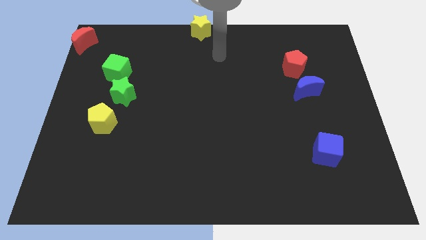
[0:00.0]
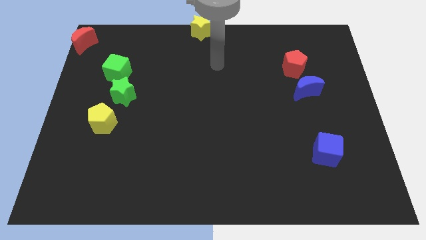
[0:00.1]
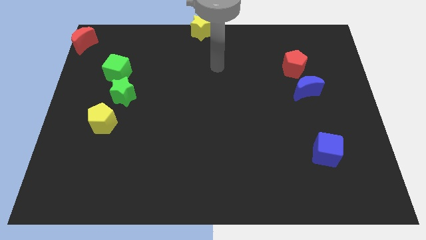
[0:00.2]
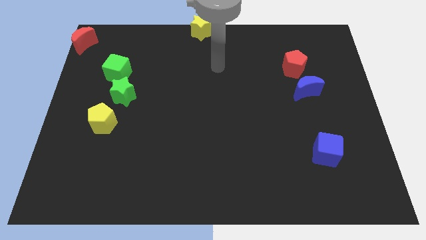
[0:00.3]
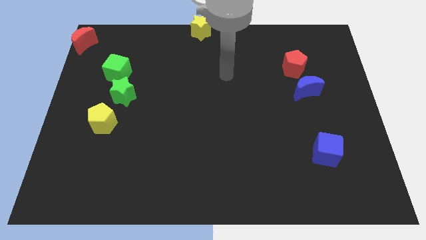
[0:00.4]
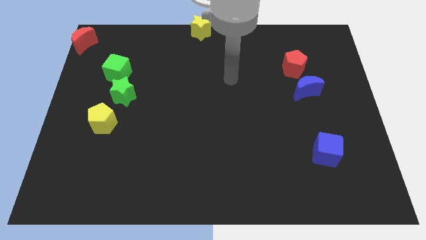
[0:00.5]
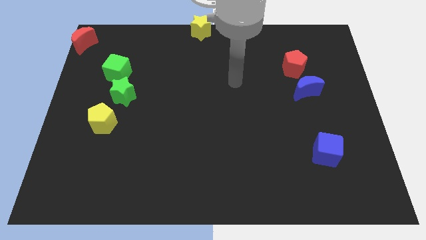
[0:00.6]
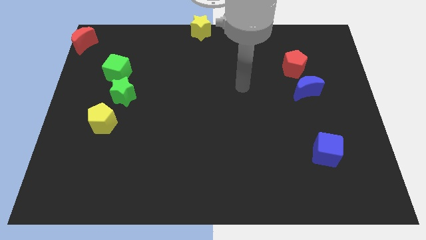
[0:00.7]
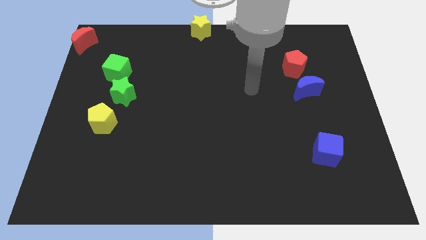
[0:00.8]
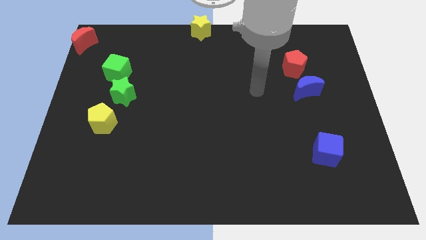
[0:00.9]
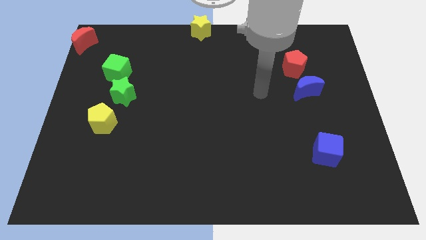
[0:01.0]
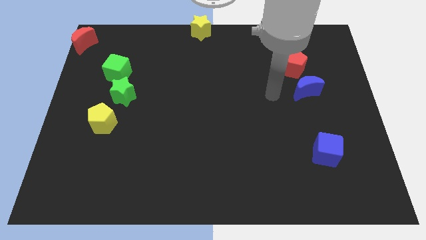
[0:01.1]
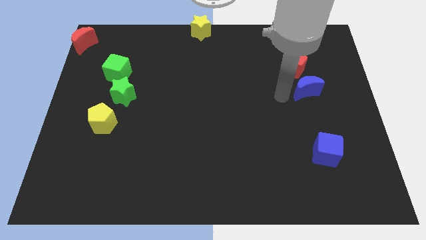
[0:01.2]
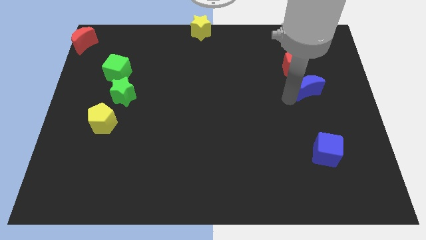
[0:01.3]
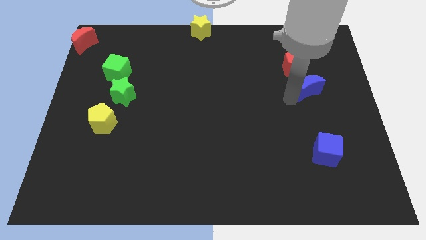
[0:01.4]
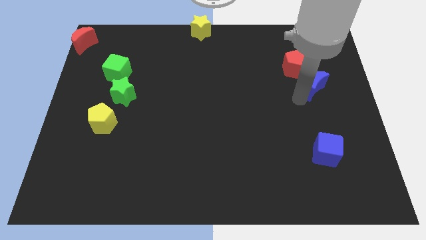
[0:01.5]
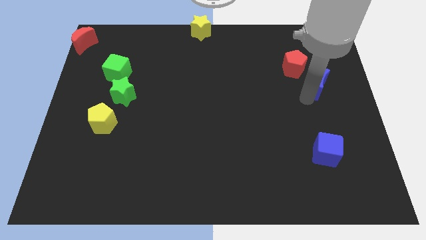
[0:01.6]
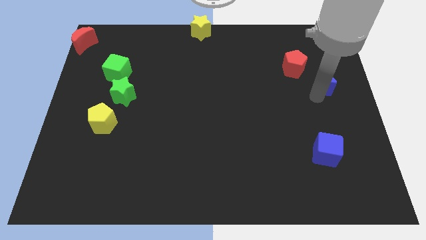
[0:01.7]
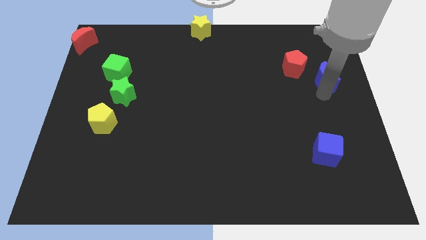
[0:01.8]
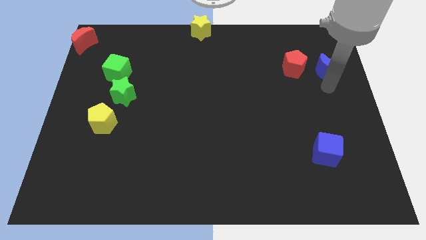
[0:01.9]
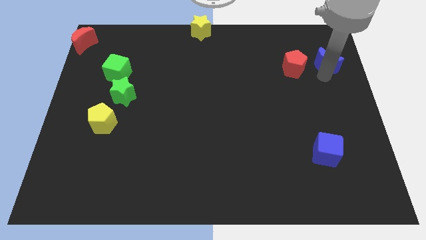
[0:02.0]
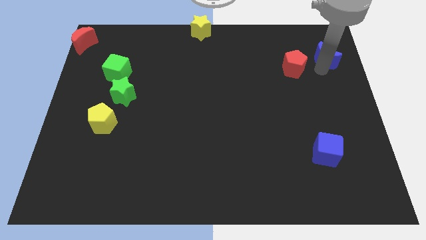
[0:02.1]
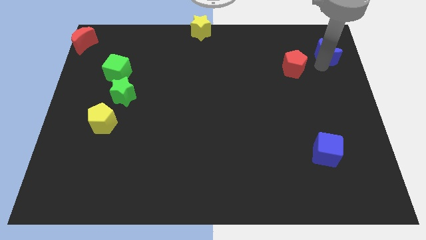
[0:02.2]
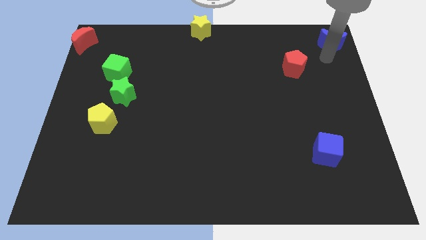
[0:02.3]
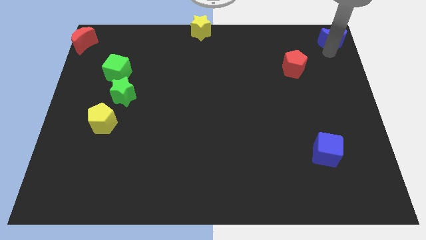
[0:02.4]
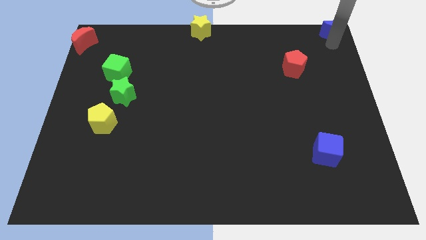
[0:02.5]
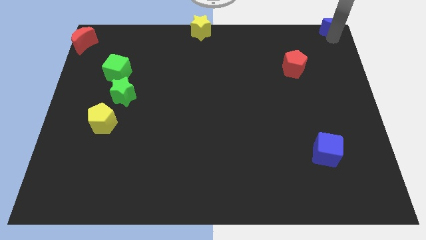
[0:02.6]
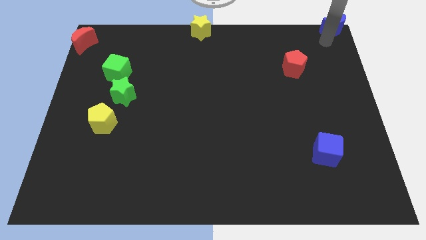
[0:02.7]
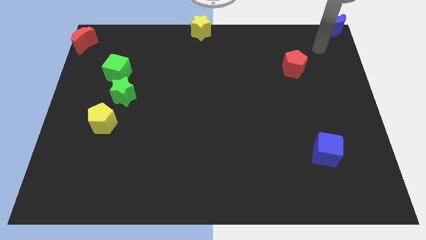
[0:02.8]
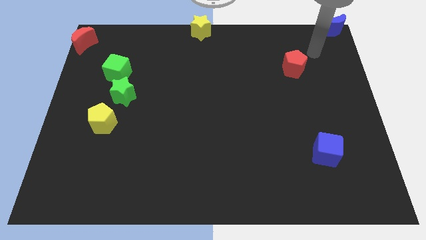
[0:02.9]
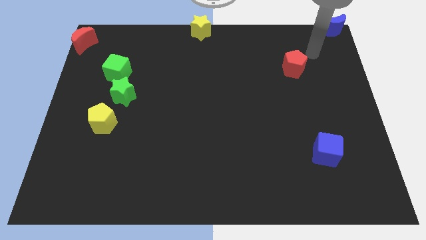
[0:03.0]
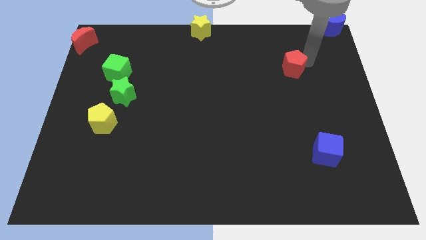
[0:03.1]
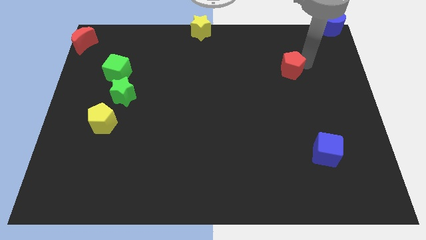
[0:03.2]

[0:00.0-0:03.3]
move the blue moon to the top right corner

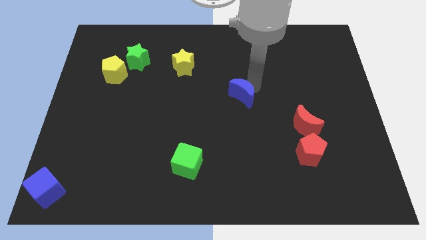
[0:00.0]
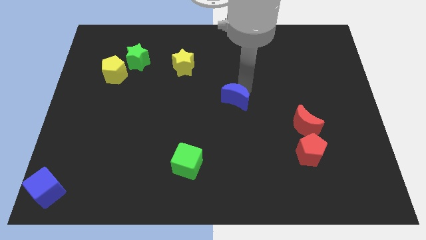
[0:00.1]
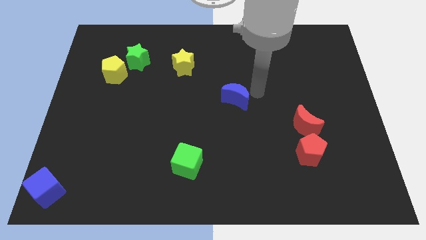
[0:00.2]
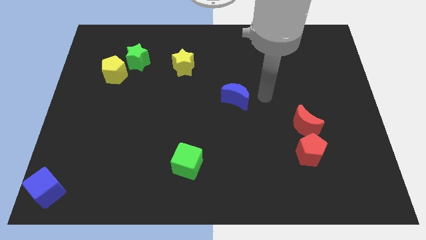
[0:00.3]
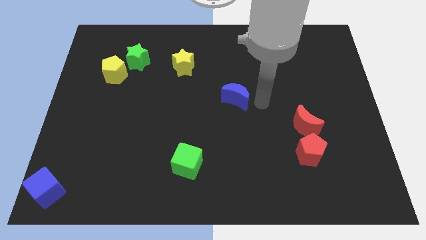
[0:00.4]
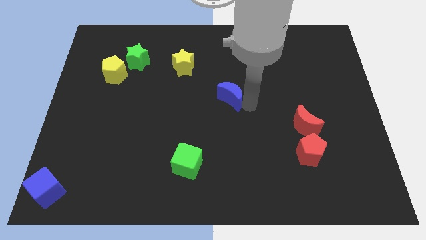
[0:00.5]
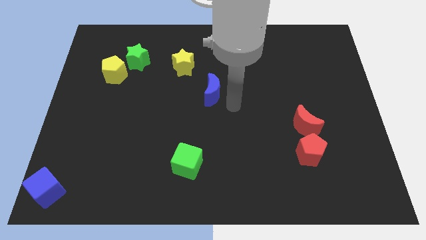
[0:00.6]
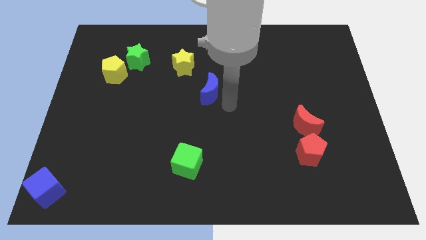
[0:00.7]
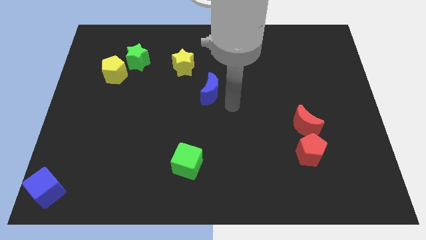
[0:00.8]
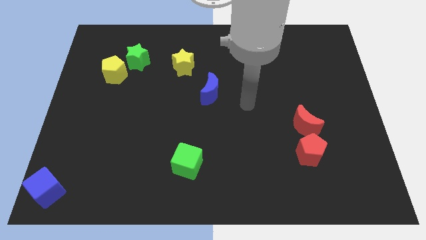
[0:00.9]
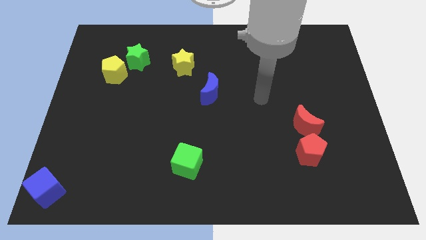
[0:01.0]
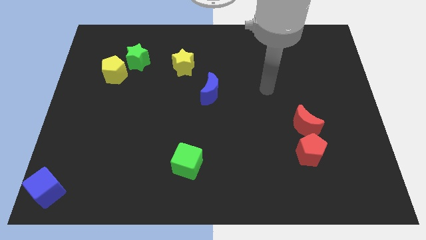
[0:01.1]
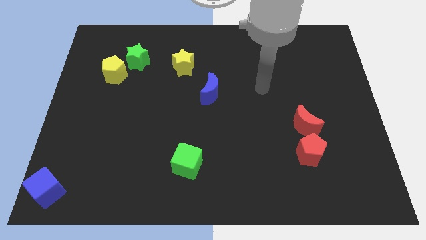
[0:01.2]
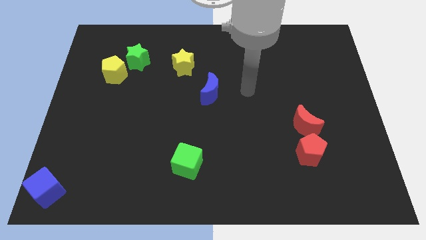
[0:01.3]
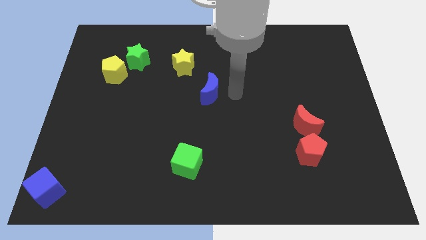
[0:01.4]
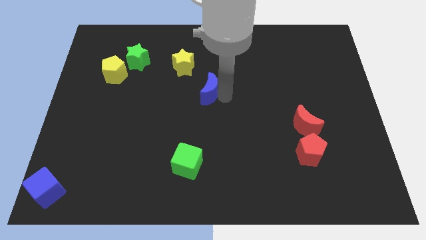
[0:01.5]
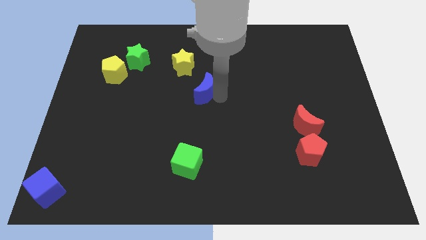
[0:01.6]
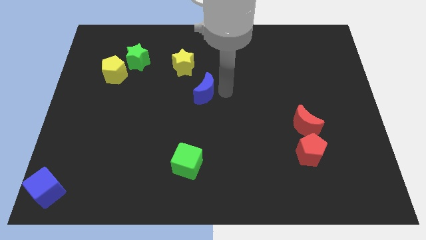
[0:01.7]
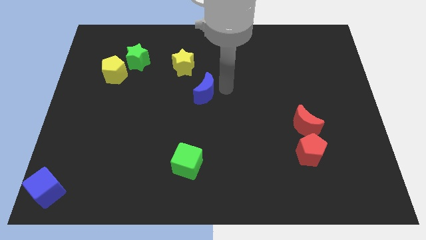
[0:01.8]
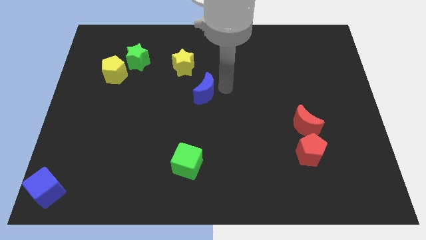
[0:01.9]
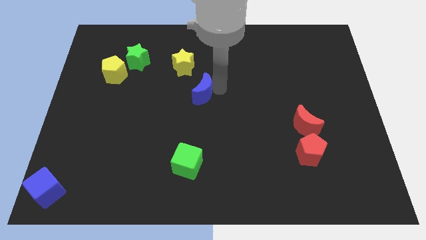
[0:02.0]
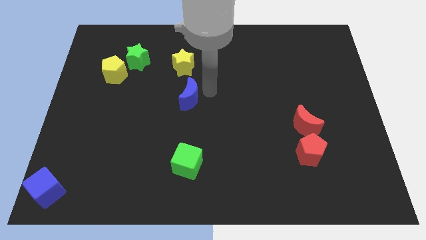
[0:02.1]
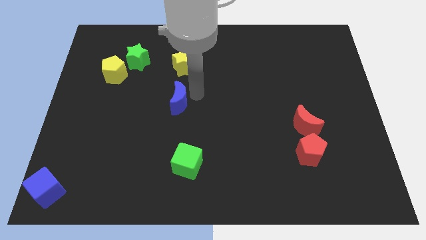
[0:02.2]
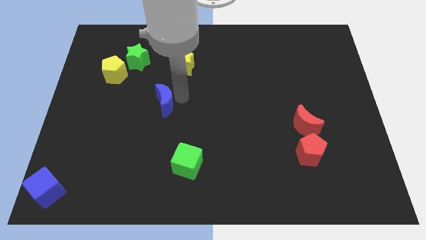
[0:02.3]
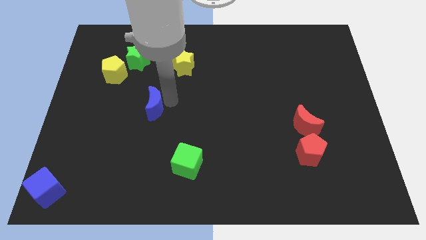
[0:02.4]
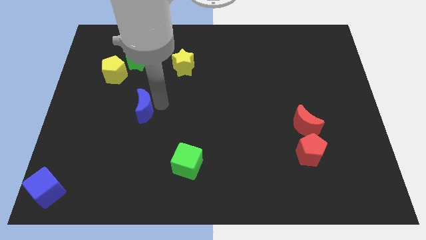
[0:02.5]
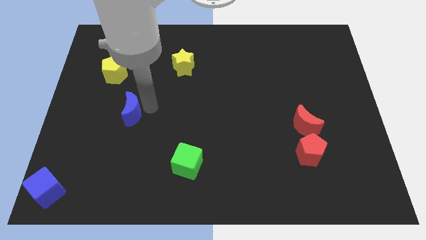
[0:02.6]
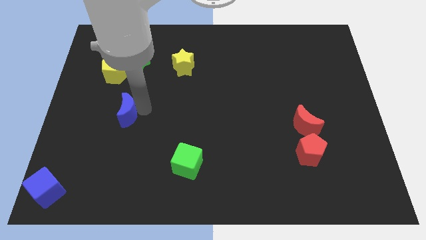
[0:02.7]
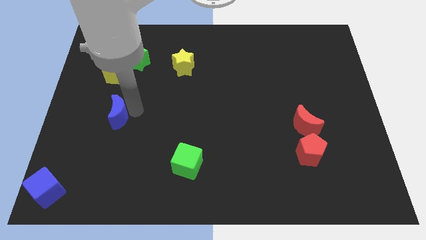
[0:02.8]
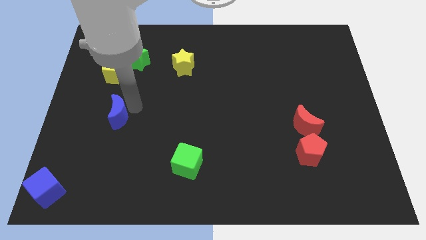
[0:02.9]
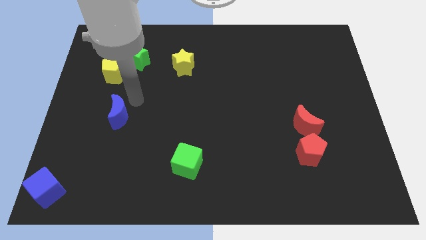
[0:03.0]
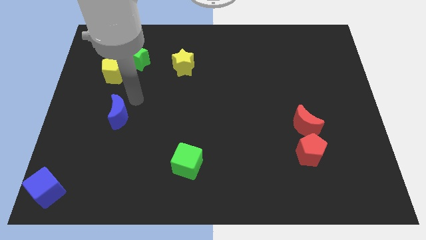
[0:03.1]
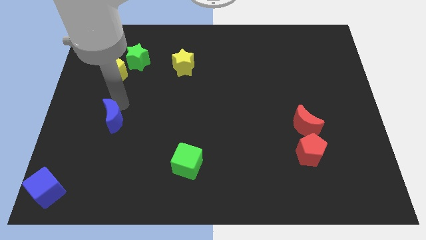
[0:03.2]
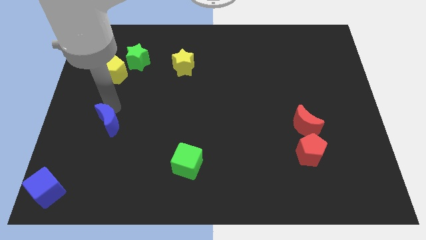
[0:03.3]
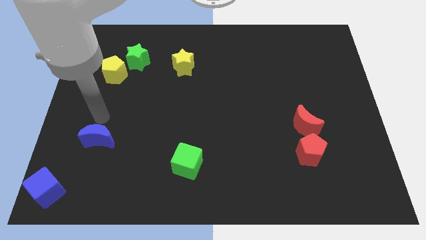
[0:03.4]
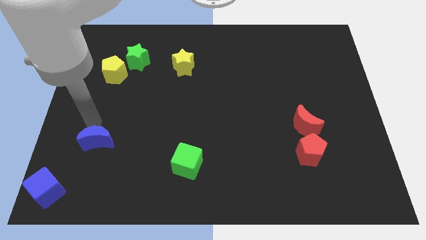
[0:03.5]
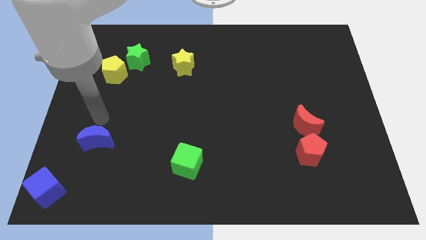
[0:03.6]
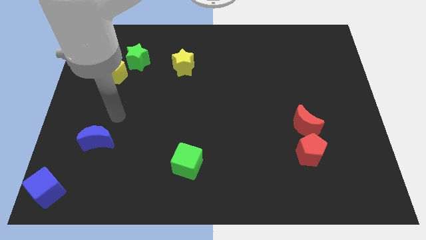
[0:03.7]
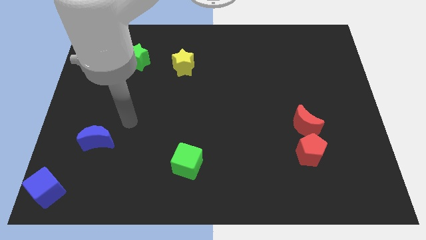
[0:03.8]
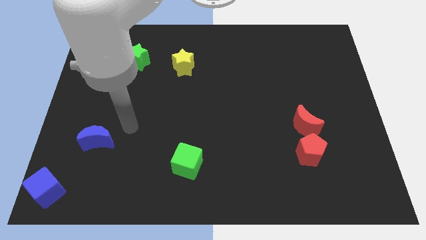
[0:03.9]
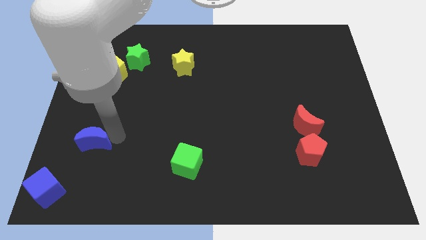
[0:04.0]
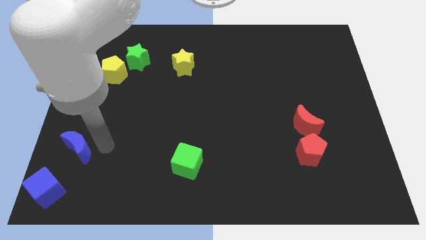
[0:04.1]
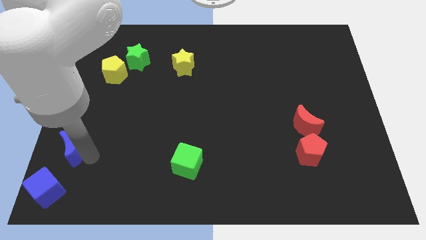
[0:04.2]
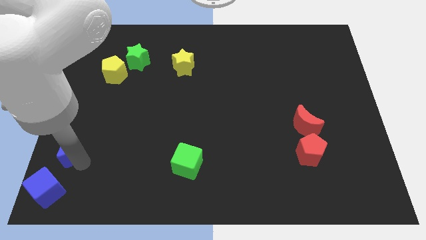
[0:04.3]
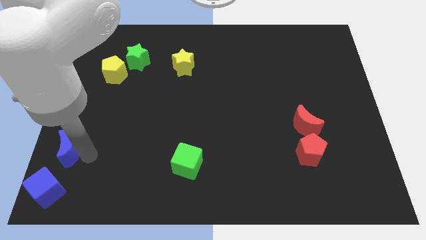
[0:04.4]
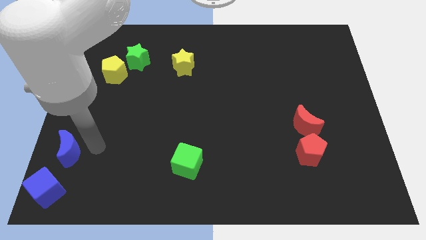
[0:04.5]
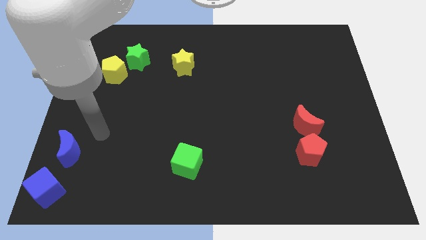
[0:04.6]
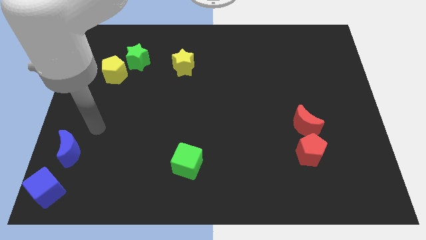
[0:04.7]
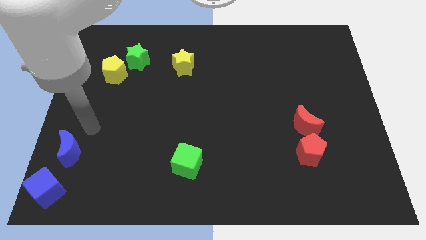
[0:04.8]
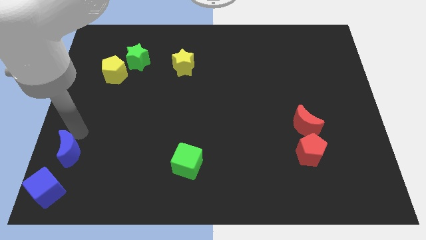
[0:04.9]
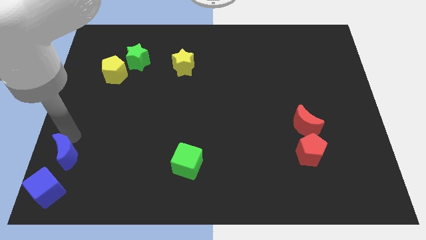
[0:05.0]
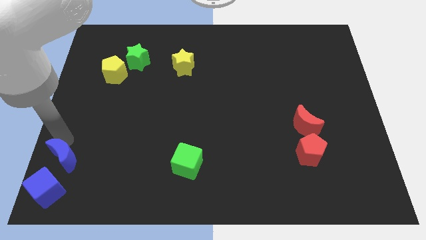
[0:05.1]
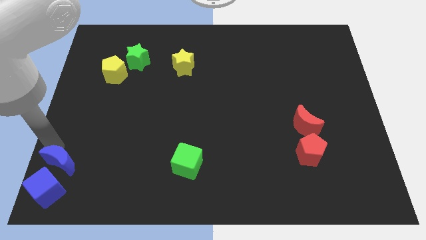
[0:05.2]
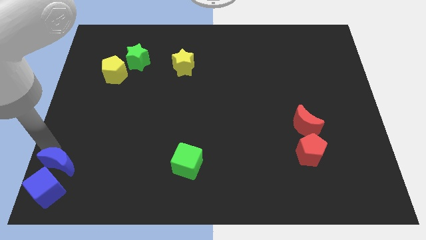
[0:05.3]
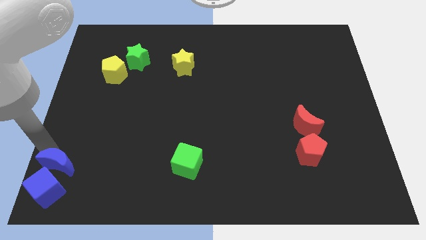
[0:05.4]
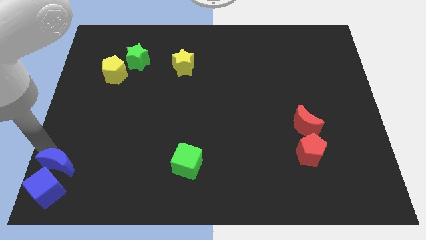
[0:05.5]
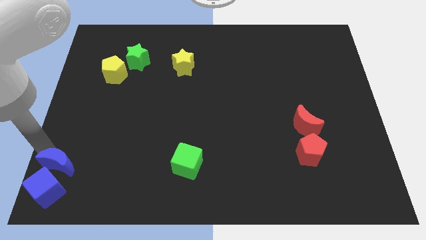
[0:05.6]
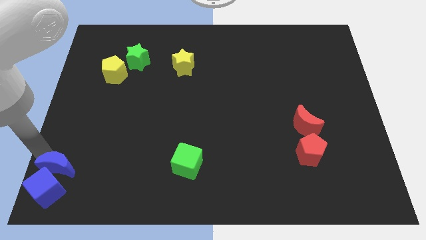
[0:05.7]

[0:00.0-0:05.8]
place the blue crescent above the blue cube
